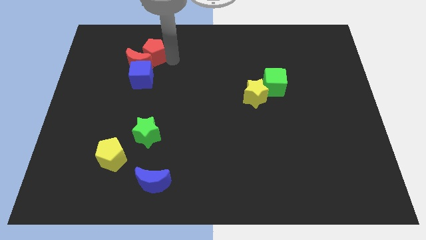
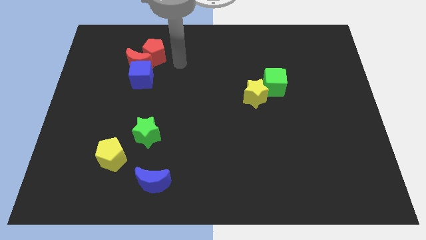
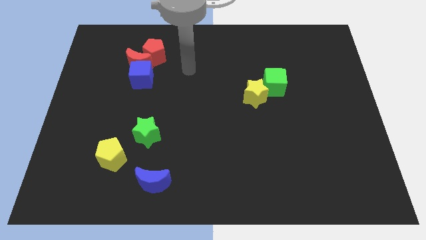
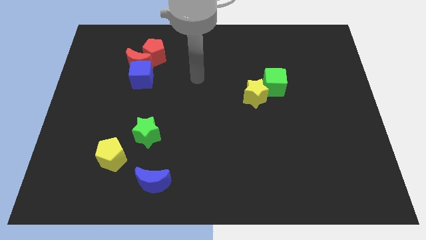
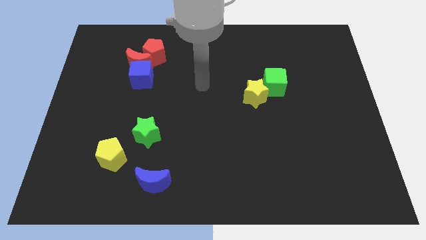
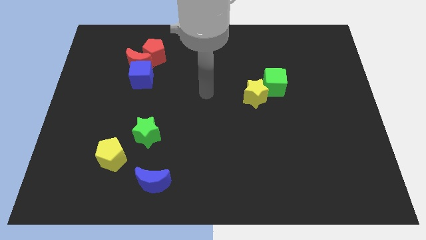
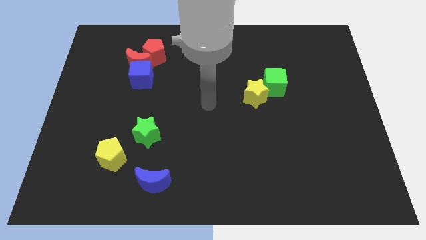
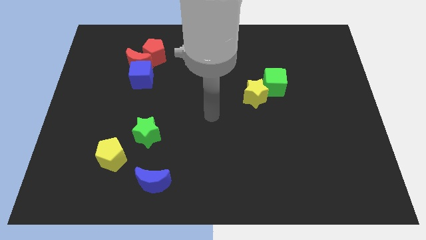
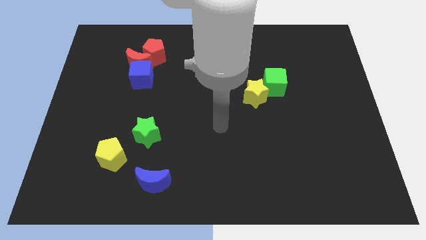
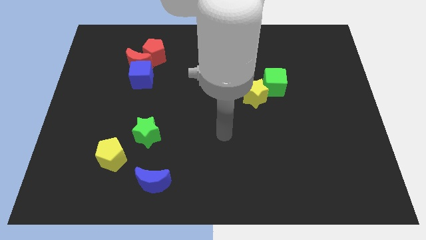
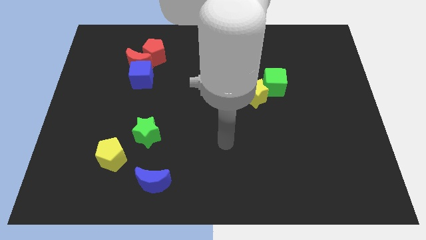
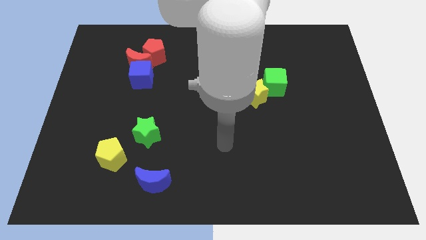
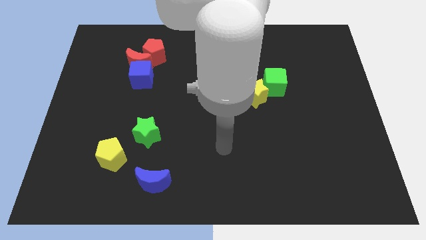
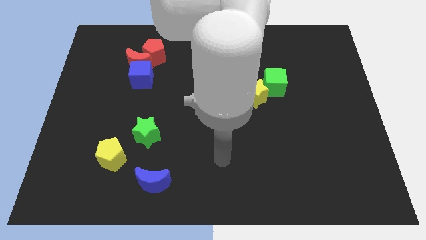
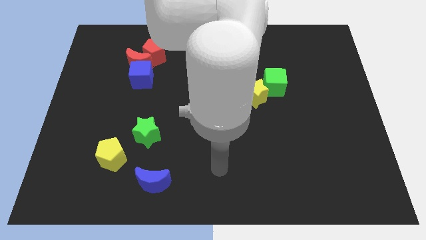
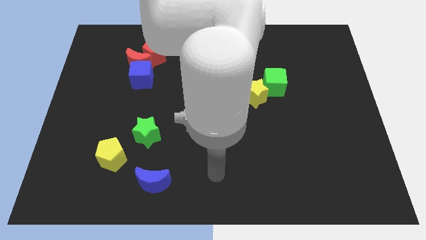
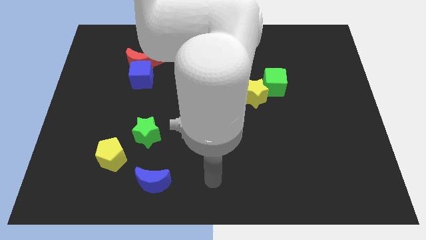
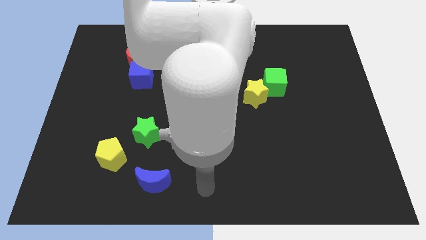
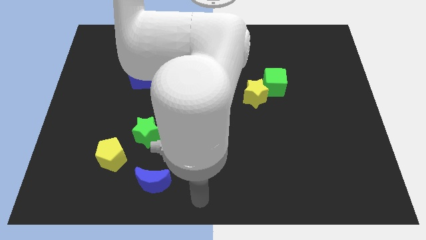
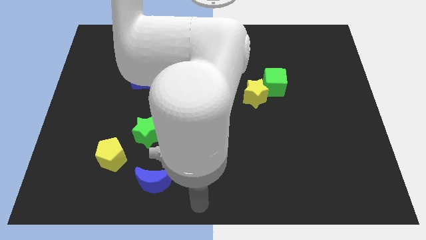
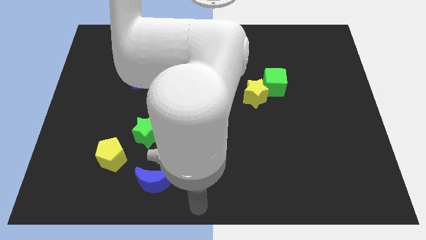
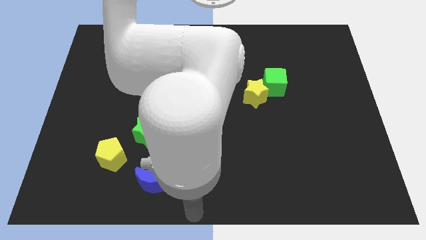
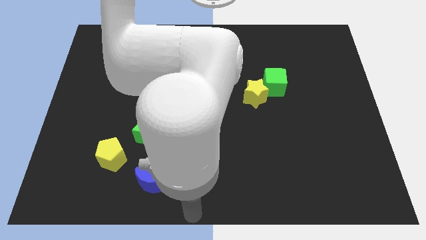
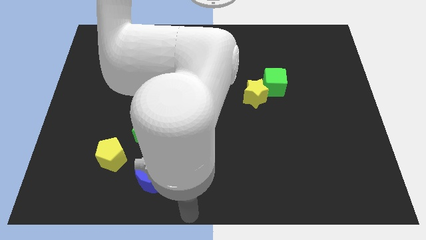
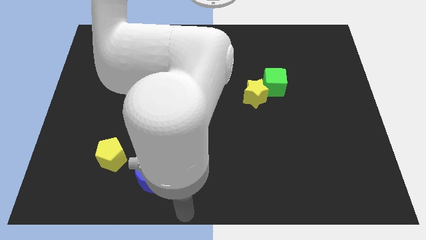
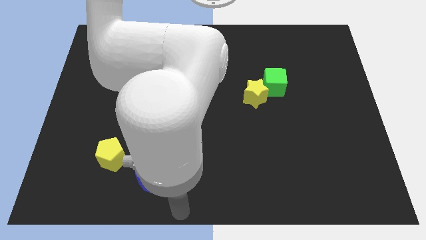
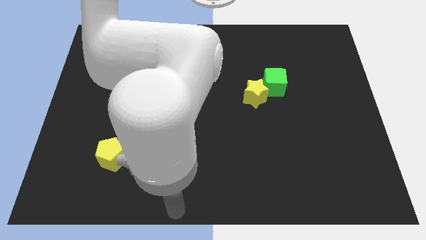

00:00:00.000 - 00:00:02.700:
move the arm away from the red pentagon

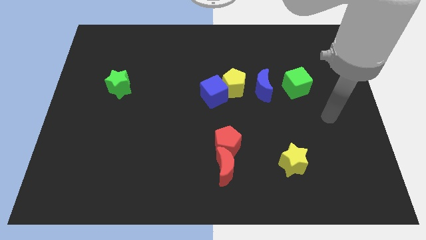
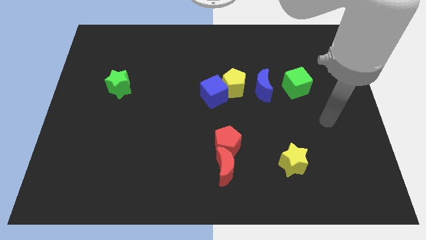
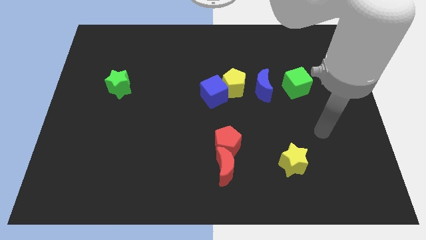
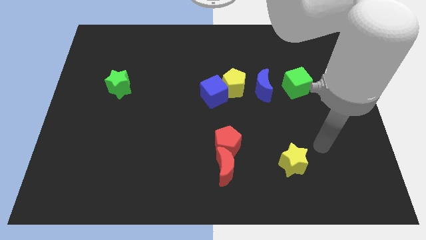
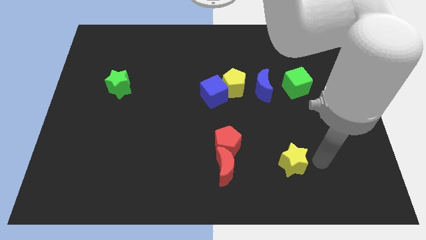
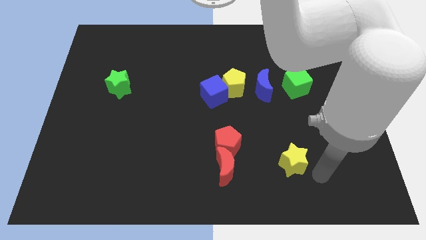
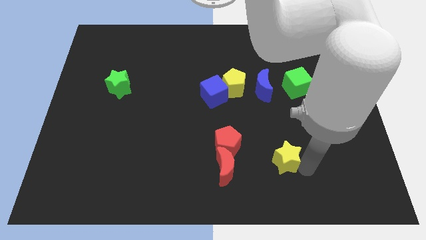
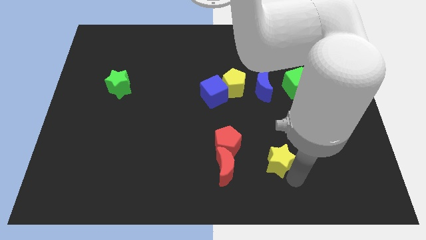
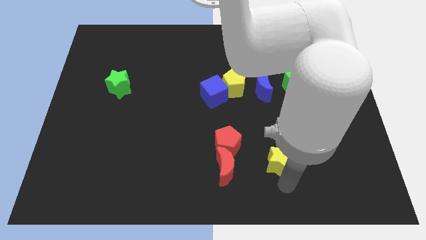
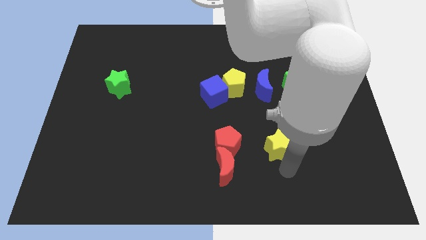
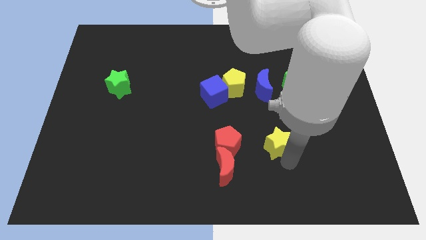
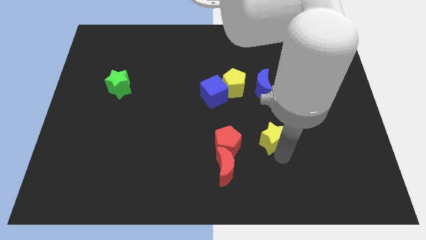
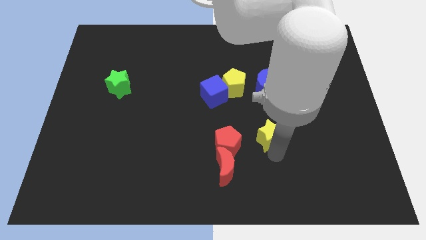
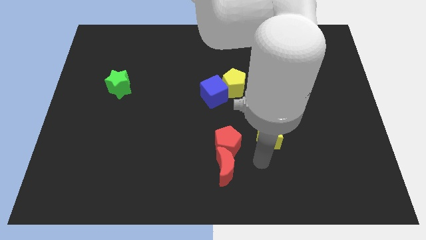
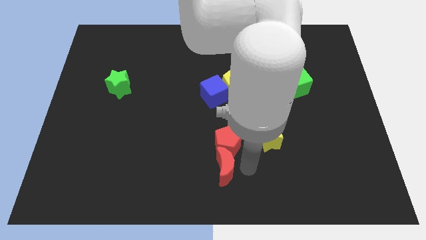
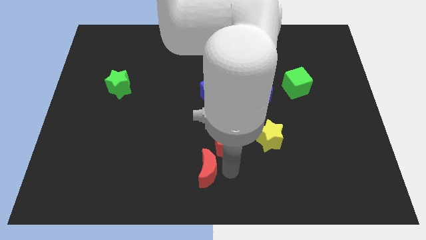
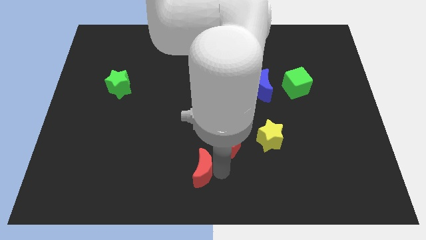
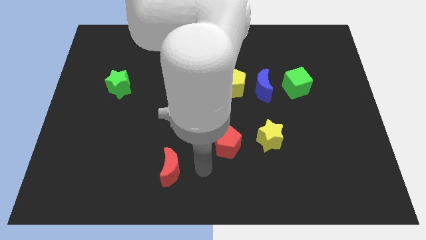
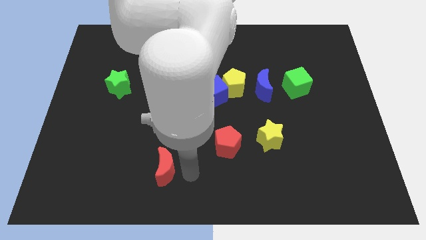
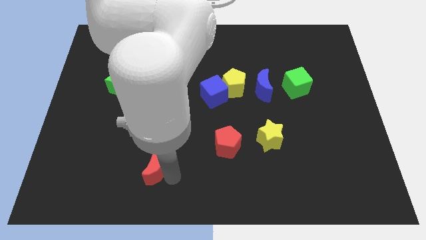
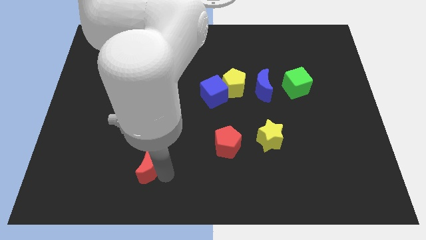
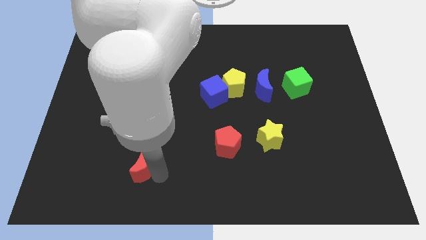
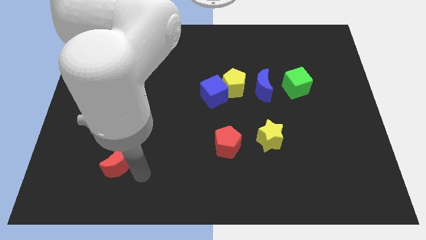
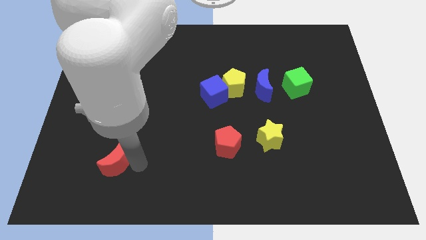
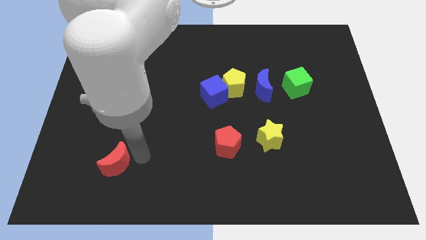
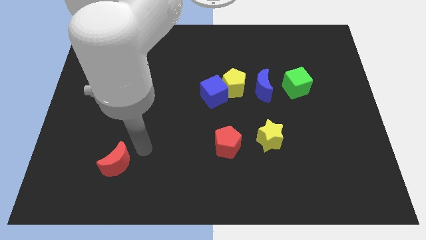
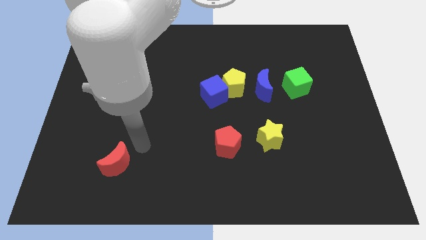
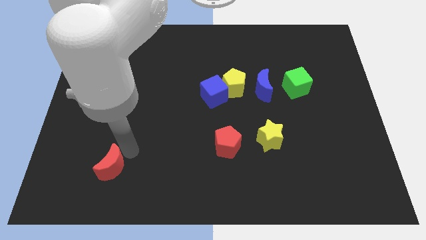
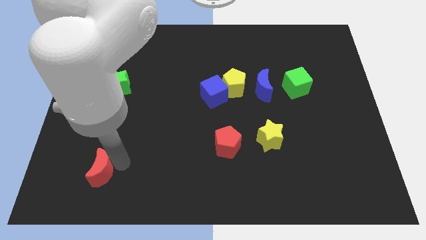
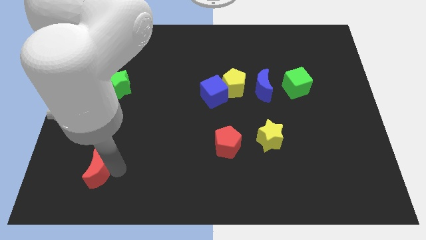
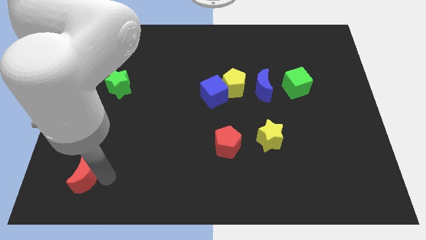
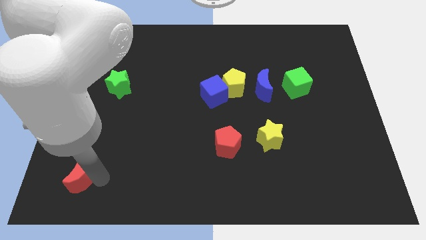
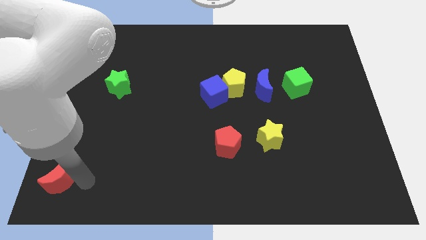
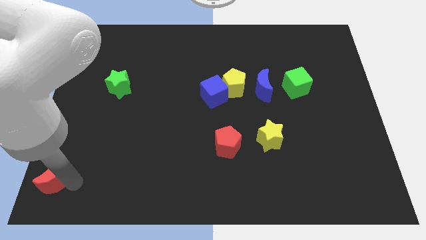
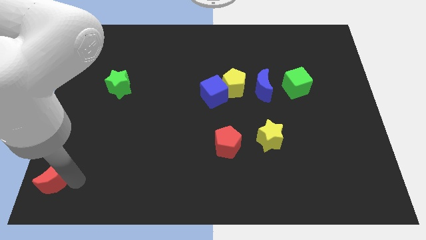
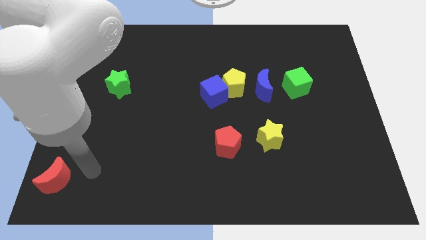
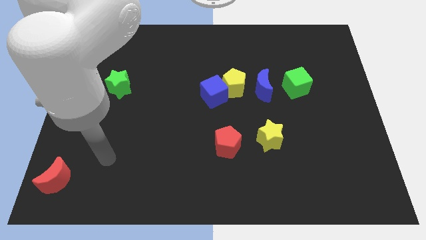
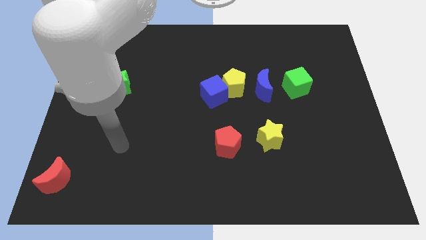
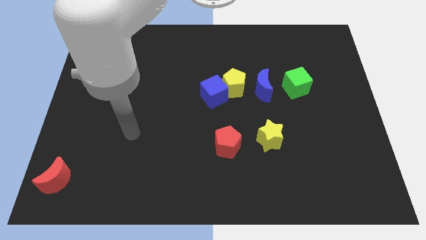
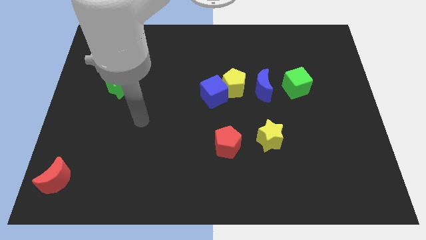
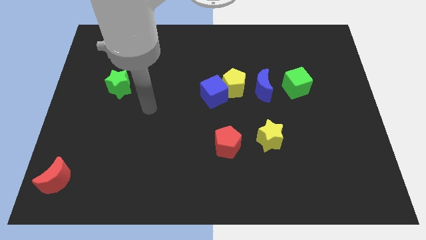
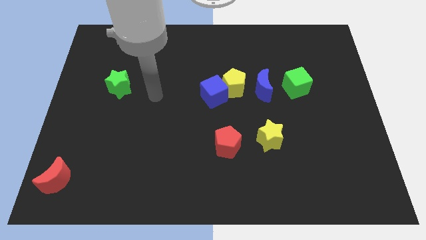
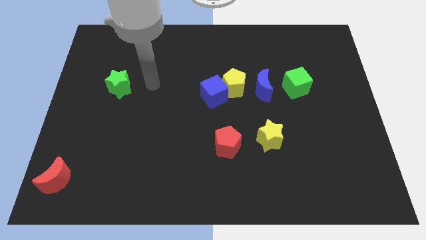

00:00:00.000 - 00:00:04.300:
drag the red crescent towards the bottom left side of the board

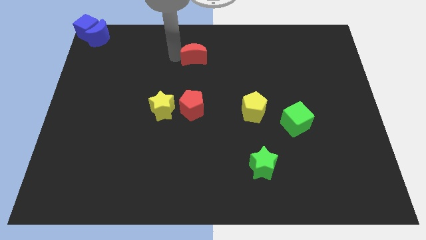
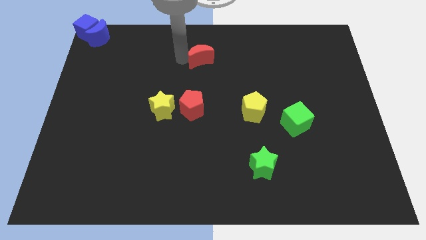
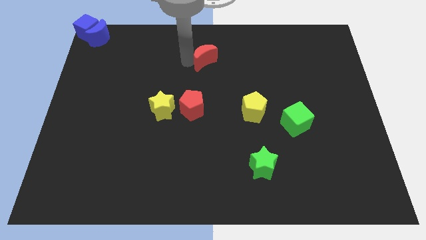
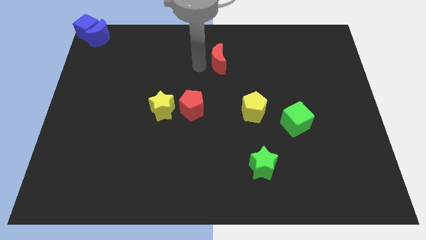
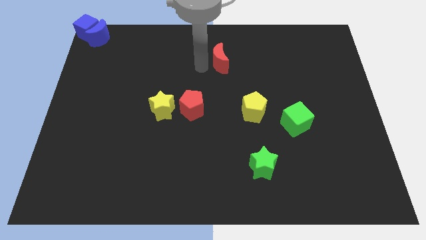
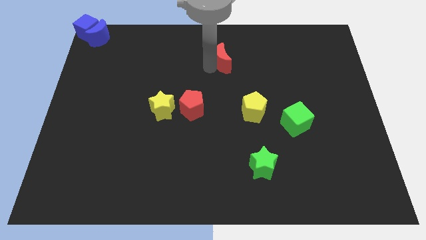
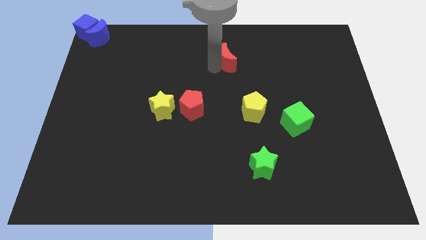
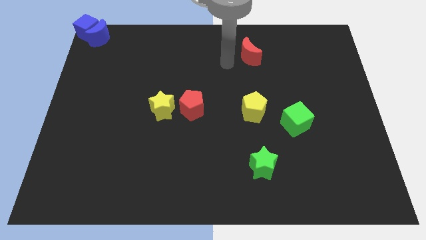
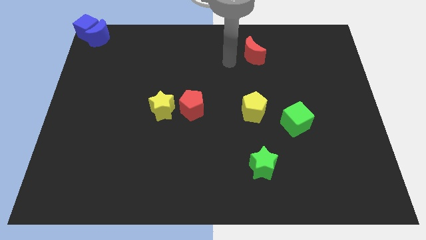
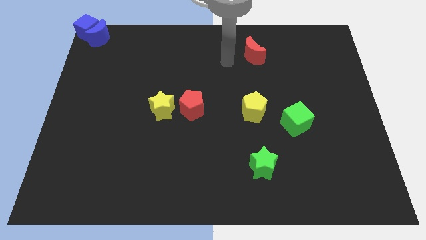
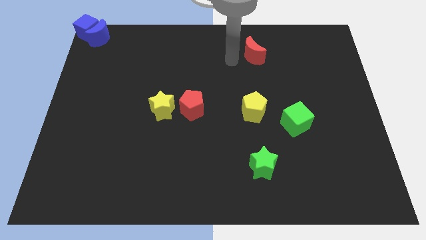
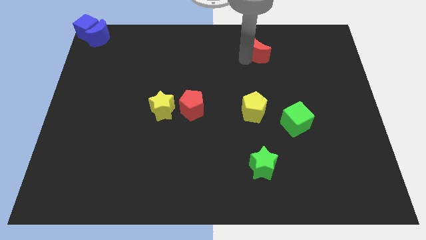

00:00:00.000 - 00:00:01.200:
place the red crescent on the top of the yellow pentagon vertically

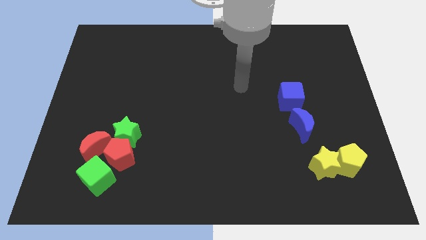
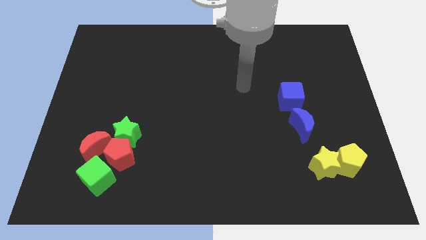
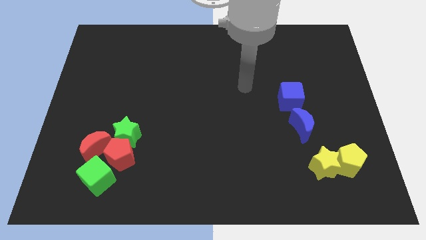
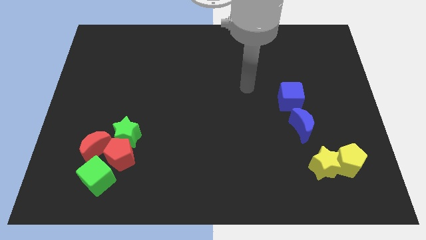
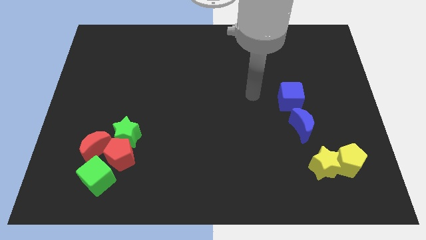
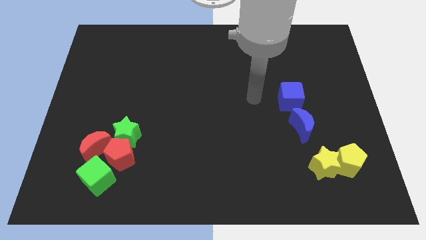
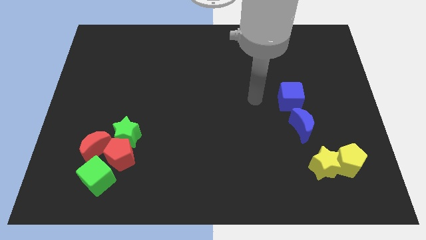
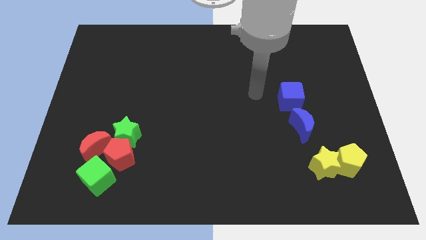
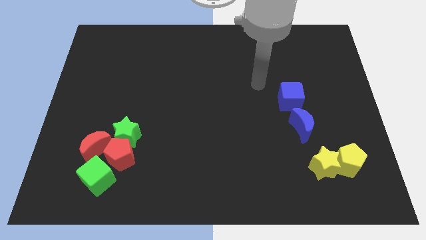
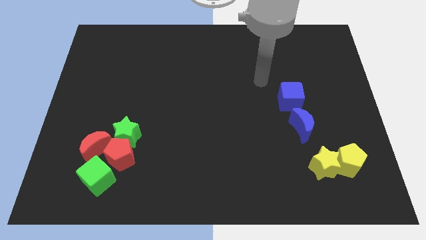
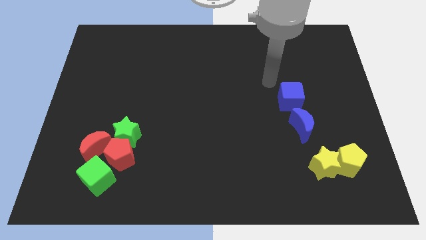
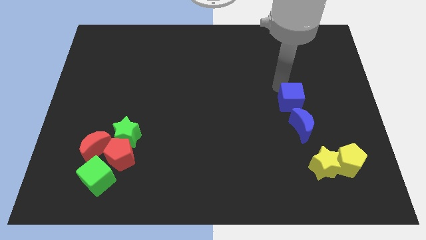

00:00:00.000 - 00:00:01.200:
point the arm above the blue cube
